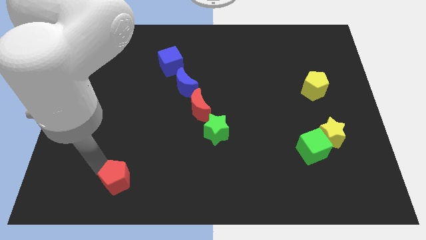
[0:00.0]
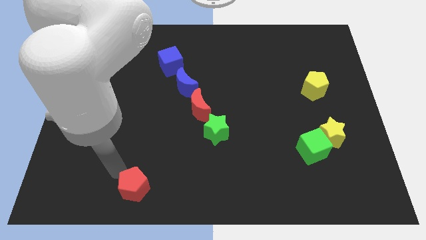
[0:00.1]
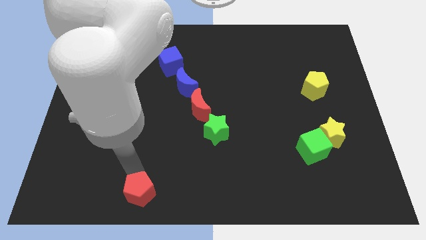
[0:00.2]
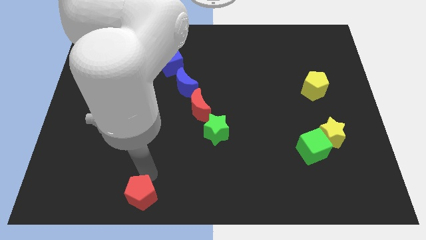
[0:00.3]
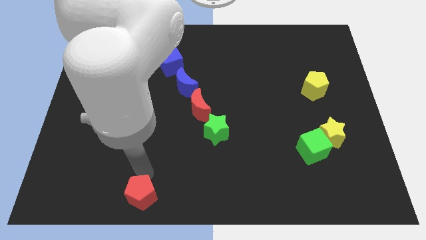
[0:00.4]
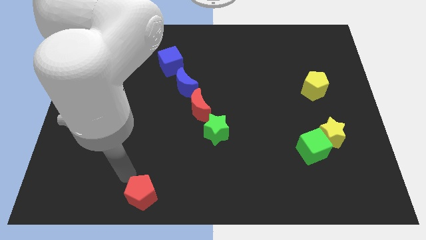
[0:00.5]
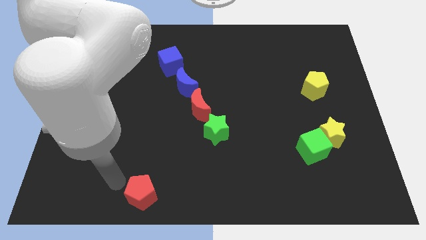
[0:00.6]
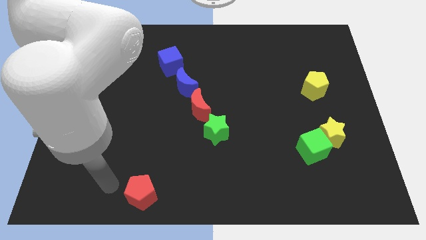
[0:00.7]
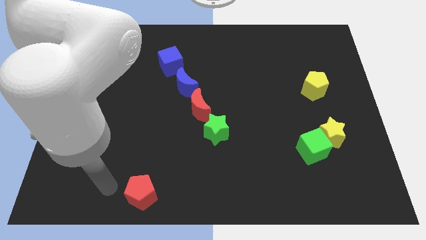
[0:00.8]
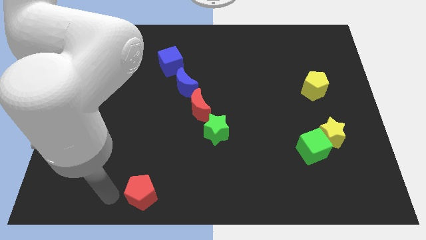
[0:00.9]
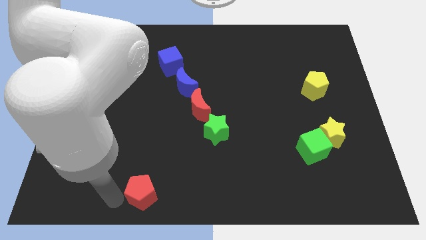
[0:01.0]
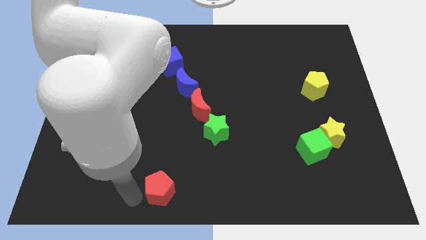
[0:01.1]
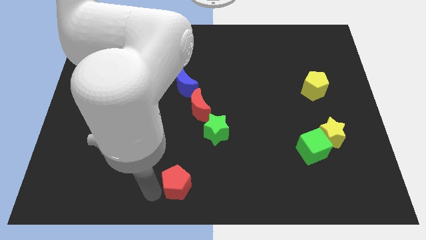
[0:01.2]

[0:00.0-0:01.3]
slide red pentagon to bottom center

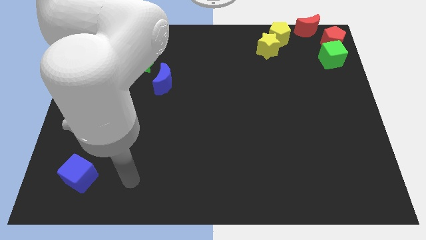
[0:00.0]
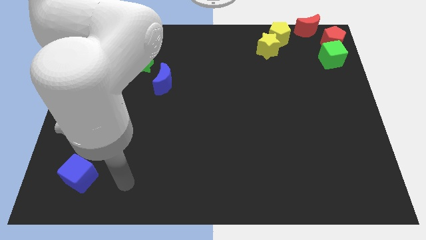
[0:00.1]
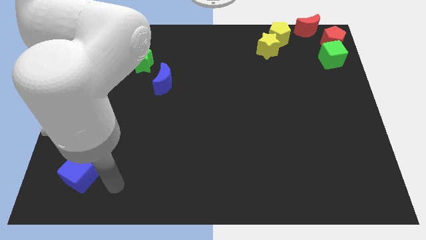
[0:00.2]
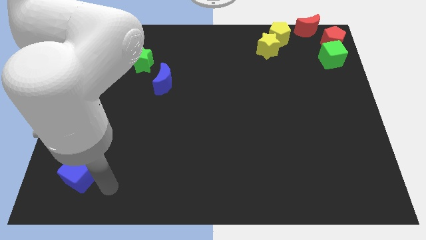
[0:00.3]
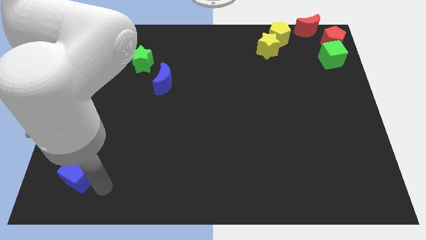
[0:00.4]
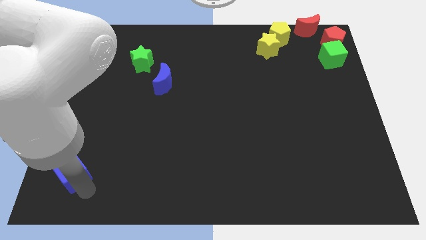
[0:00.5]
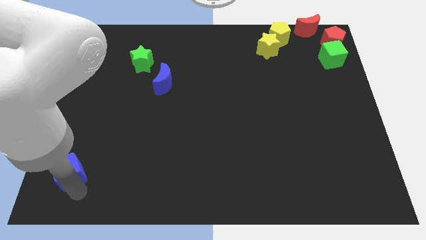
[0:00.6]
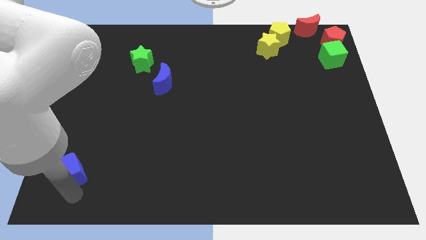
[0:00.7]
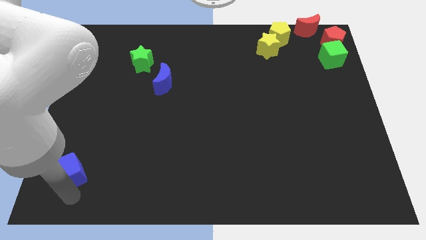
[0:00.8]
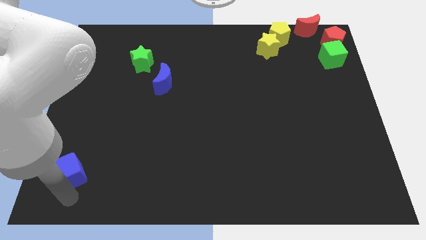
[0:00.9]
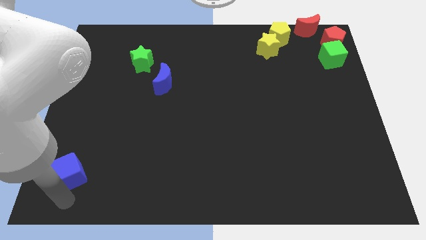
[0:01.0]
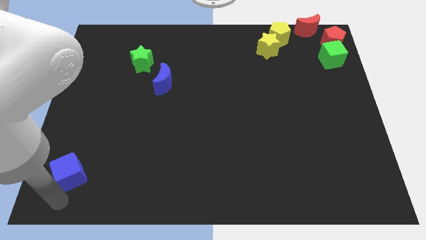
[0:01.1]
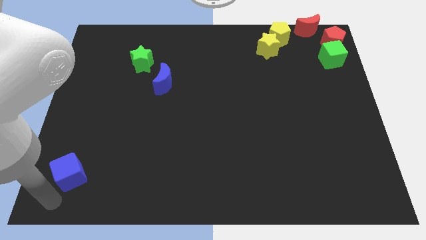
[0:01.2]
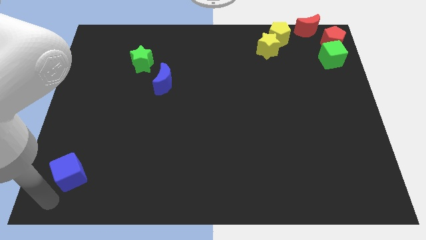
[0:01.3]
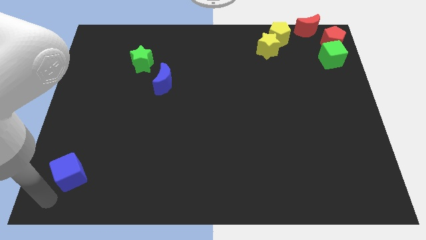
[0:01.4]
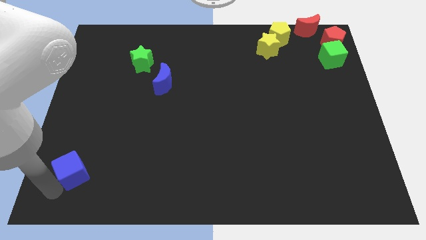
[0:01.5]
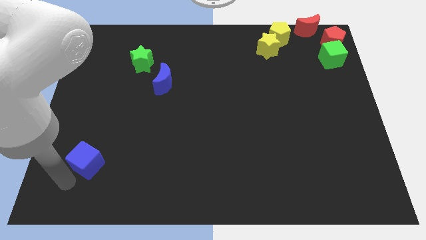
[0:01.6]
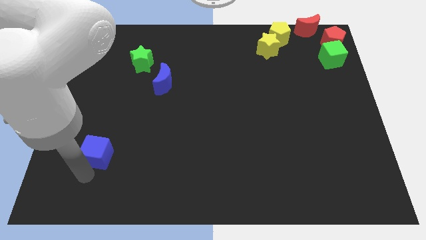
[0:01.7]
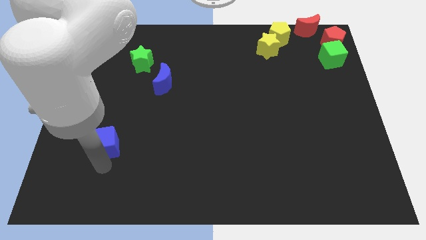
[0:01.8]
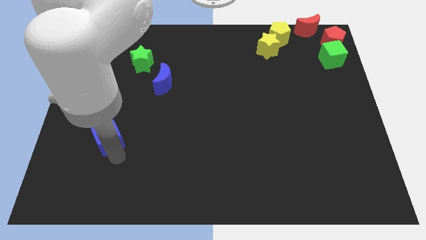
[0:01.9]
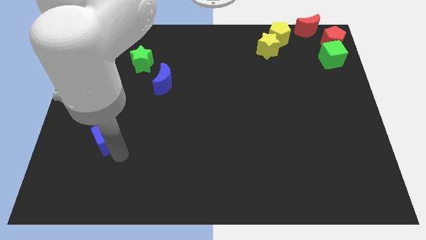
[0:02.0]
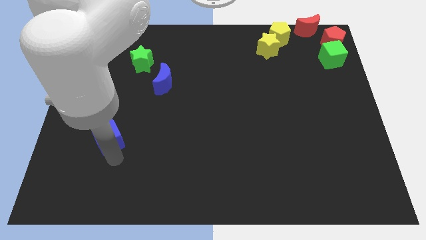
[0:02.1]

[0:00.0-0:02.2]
push the blue cube slightly upwards

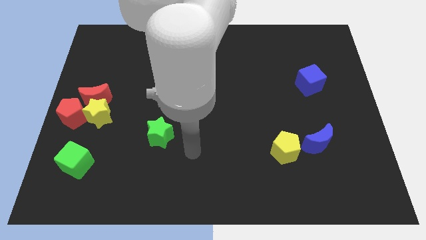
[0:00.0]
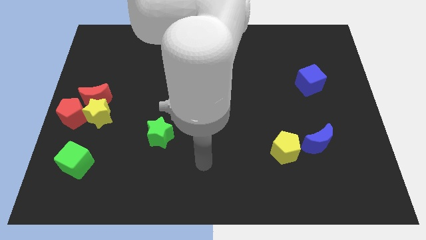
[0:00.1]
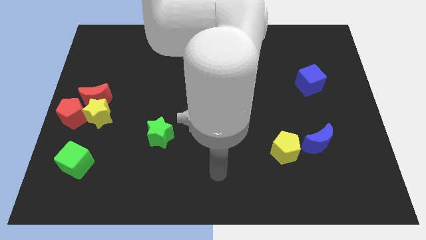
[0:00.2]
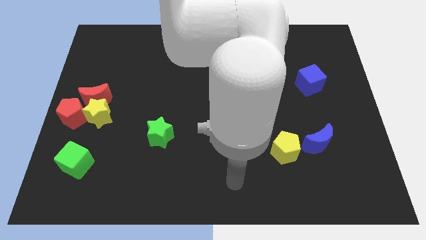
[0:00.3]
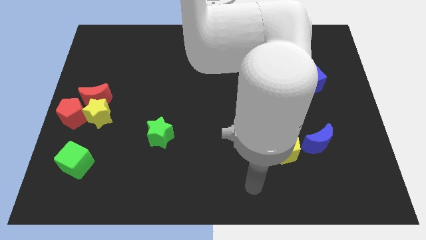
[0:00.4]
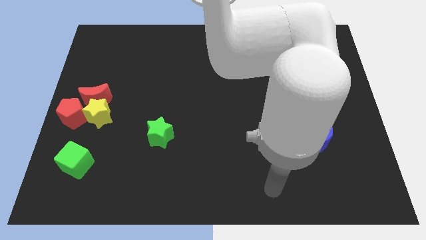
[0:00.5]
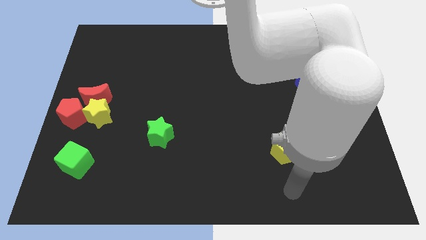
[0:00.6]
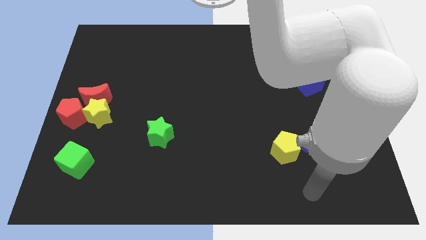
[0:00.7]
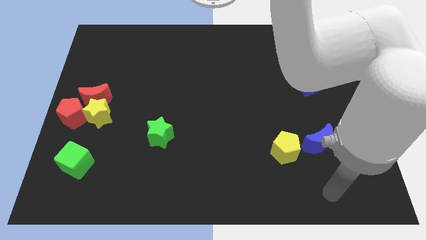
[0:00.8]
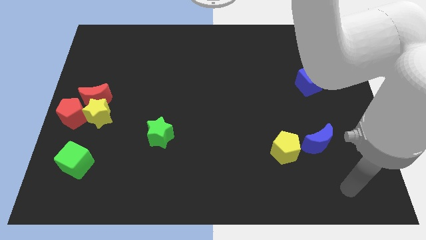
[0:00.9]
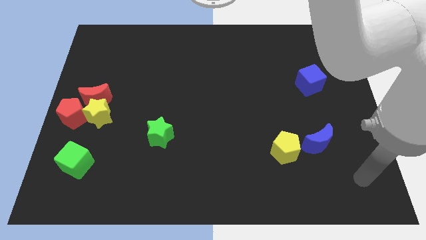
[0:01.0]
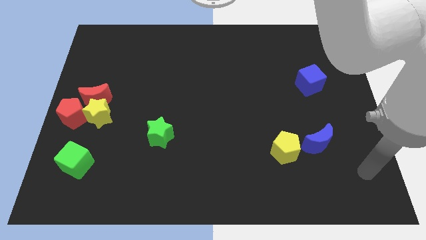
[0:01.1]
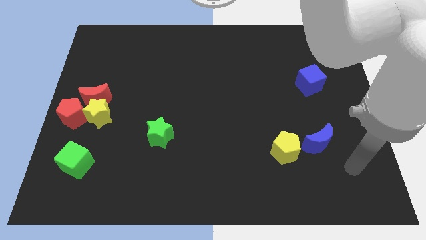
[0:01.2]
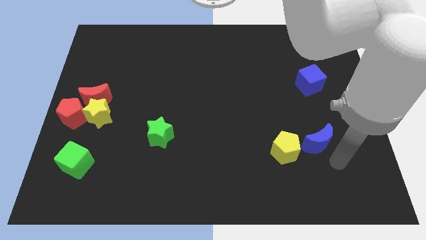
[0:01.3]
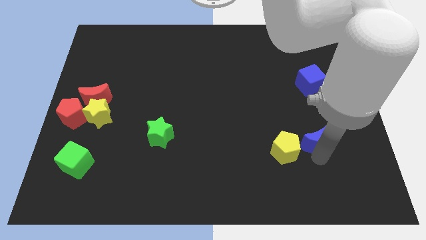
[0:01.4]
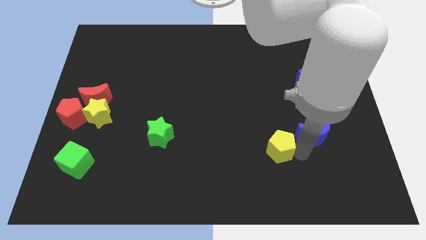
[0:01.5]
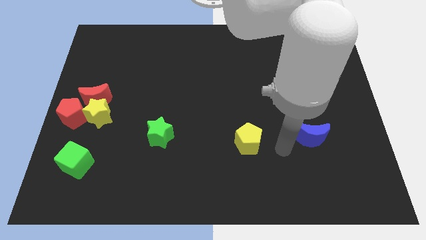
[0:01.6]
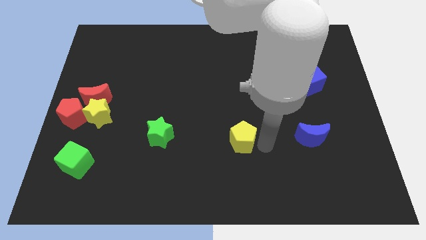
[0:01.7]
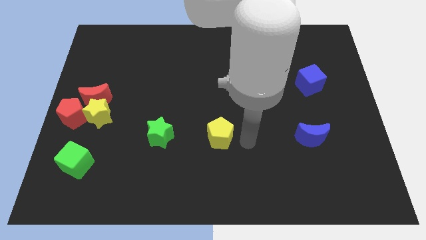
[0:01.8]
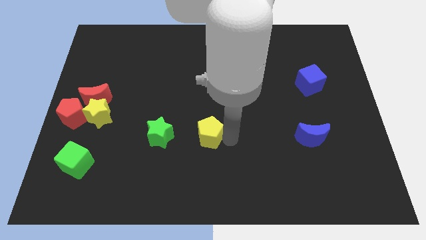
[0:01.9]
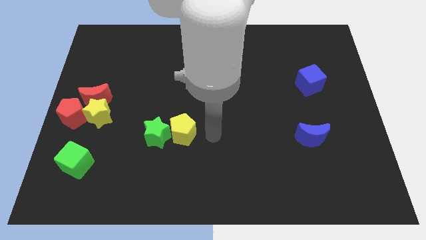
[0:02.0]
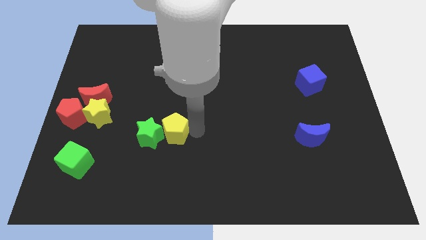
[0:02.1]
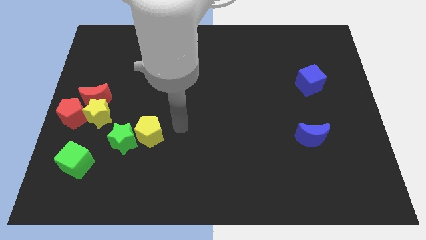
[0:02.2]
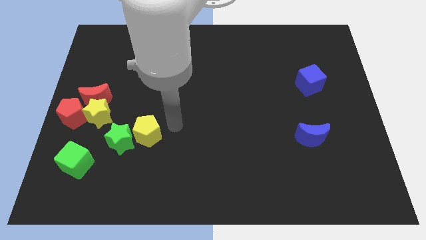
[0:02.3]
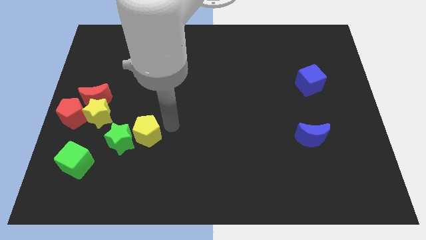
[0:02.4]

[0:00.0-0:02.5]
separate the yellow pentagon from the blue moon

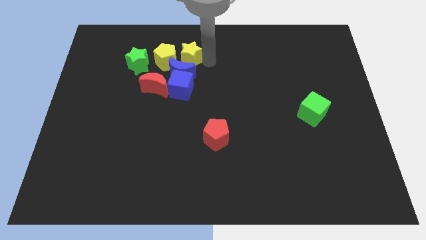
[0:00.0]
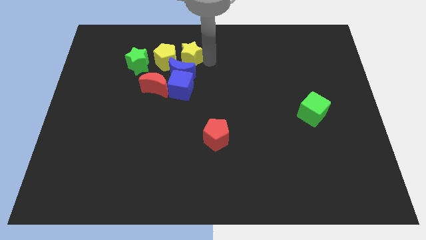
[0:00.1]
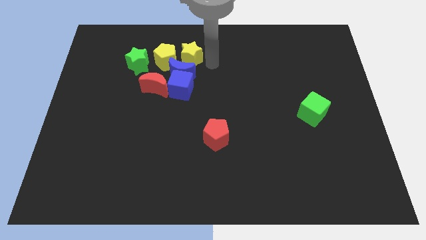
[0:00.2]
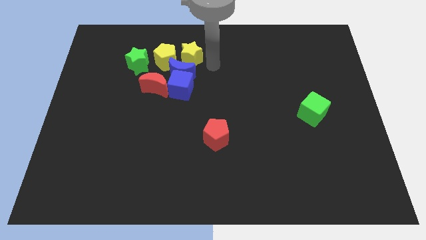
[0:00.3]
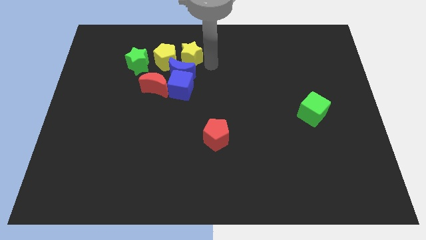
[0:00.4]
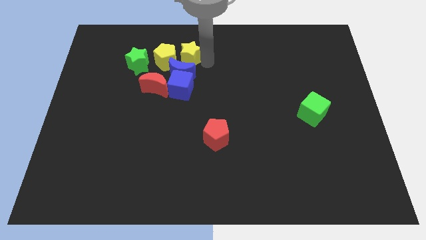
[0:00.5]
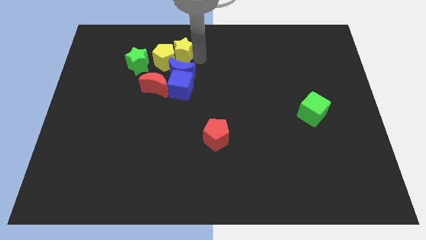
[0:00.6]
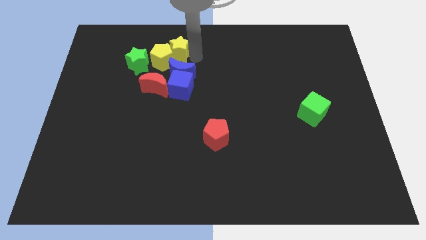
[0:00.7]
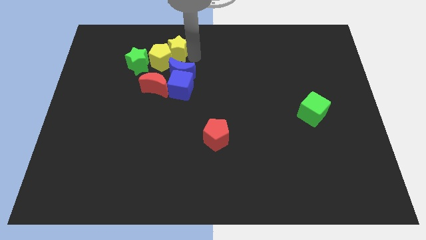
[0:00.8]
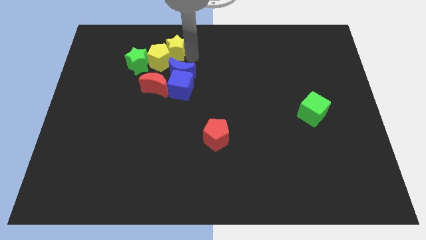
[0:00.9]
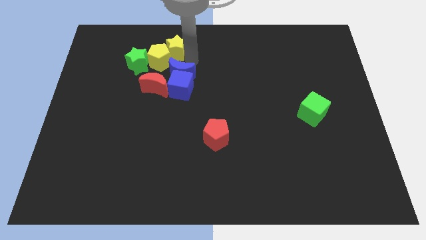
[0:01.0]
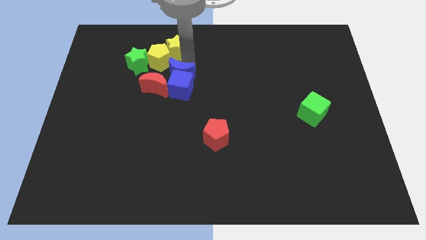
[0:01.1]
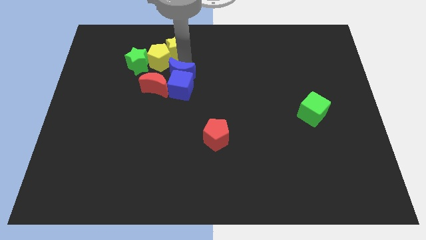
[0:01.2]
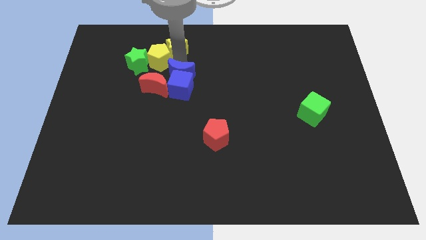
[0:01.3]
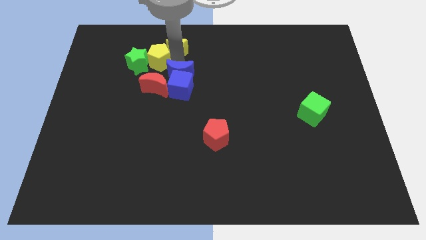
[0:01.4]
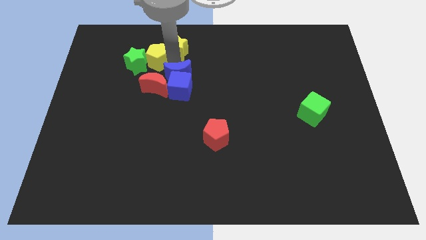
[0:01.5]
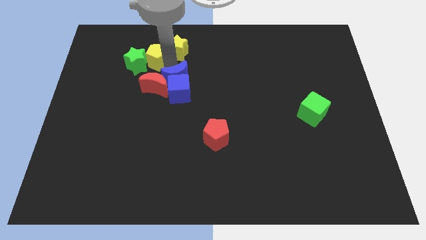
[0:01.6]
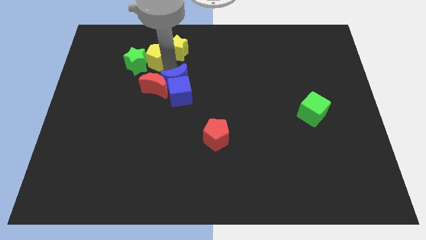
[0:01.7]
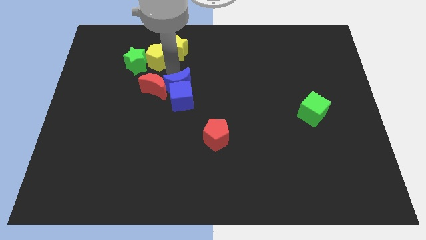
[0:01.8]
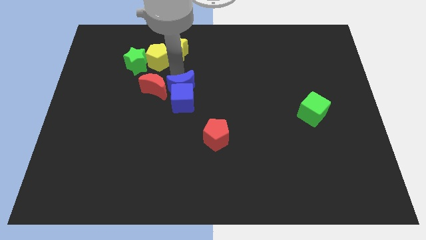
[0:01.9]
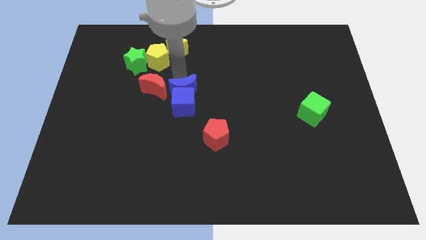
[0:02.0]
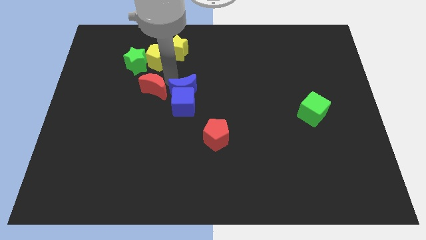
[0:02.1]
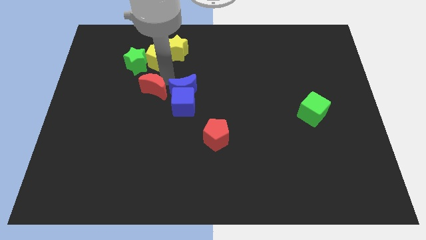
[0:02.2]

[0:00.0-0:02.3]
move blue blocks slightly down

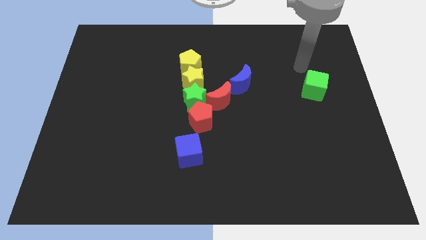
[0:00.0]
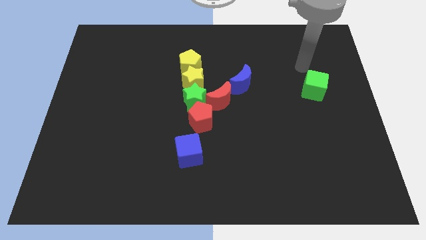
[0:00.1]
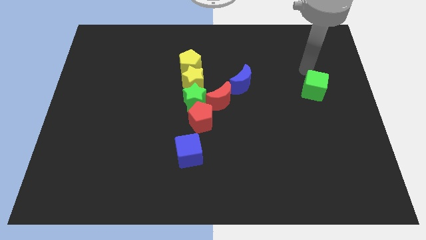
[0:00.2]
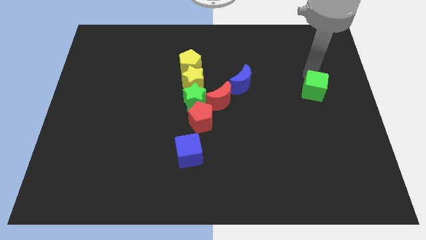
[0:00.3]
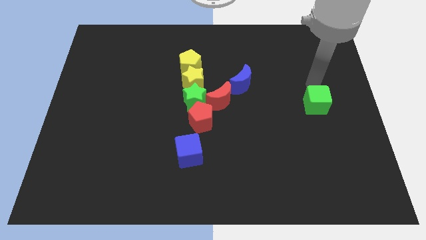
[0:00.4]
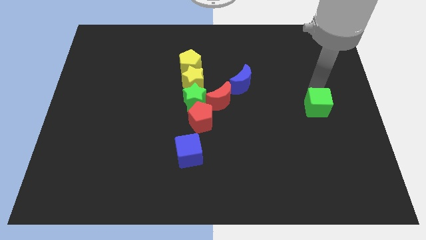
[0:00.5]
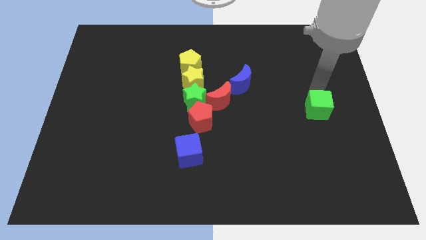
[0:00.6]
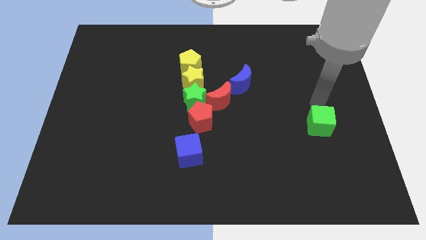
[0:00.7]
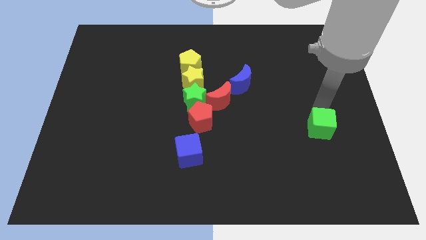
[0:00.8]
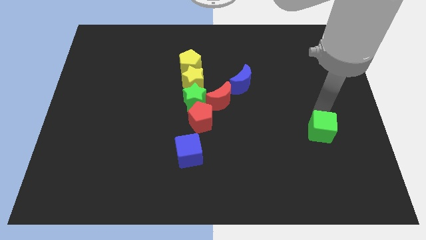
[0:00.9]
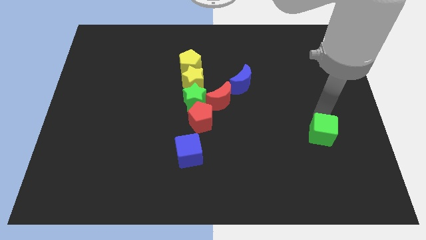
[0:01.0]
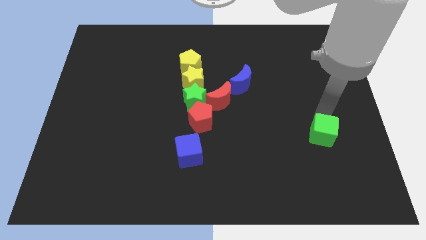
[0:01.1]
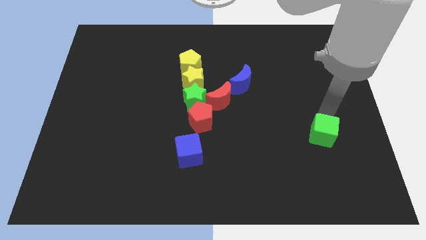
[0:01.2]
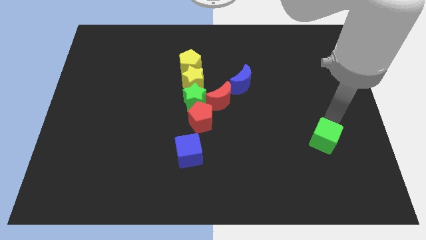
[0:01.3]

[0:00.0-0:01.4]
push the green cube downwards
